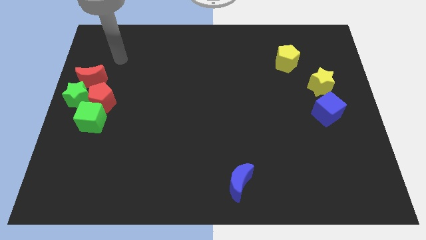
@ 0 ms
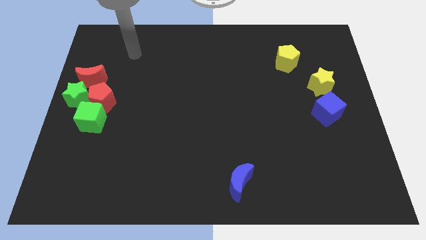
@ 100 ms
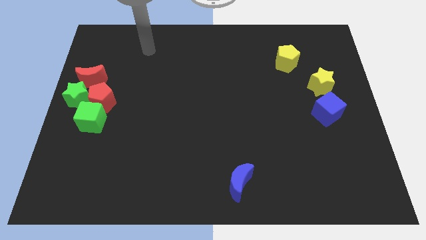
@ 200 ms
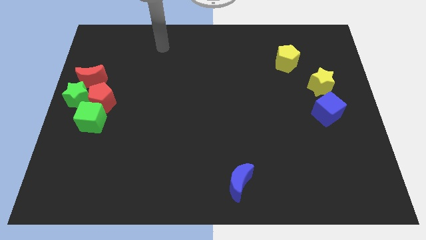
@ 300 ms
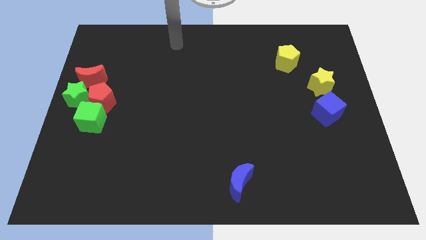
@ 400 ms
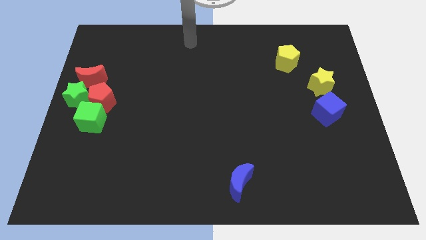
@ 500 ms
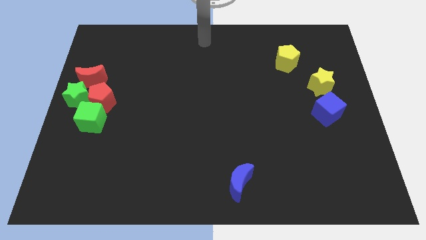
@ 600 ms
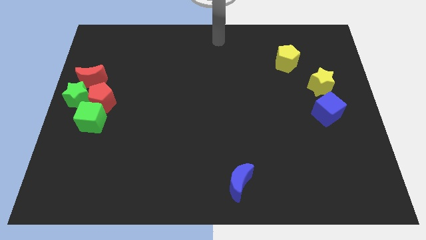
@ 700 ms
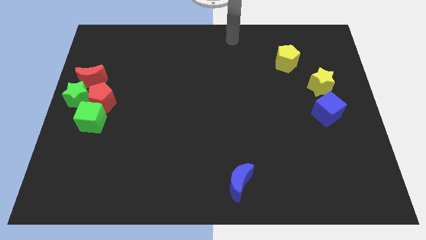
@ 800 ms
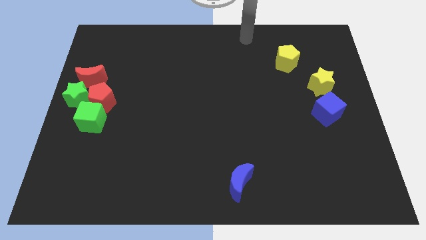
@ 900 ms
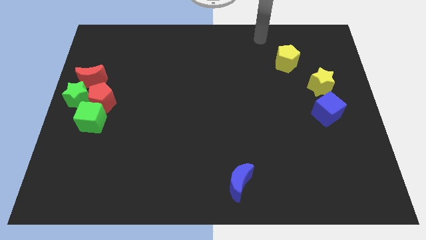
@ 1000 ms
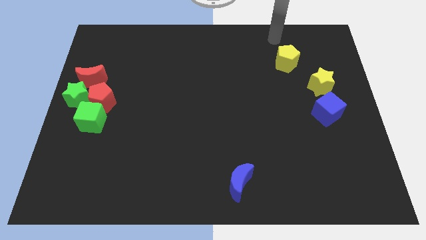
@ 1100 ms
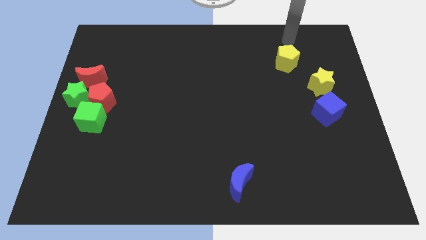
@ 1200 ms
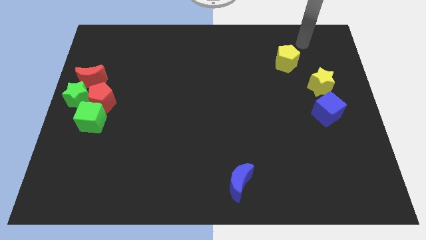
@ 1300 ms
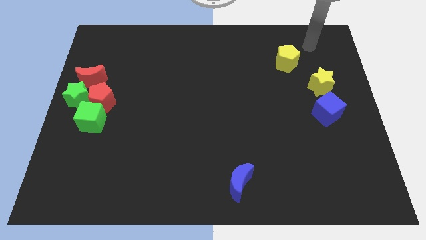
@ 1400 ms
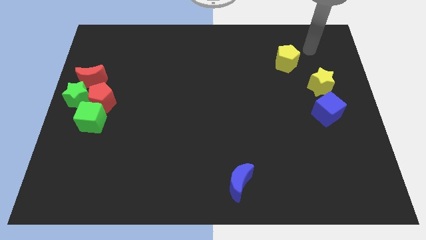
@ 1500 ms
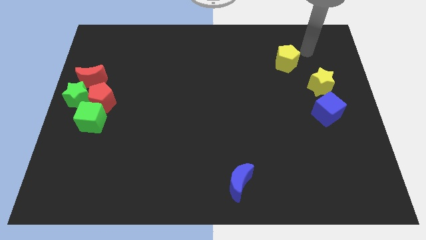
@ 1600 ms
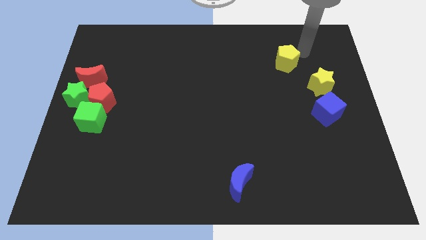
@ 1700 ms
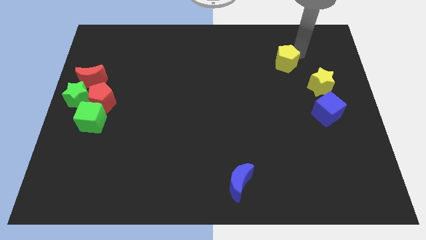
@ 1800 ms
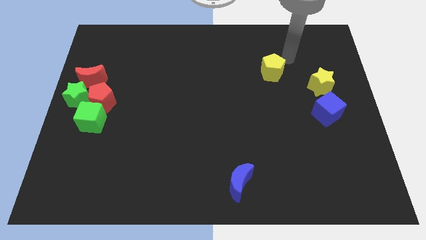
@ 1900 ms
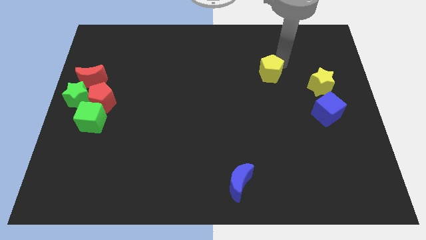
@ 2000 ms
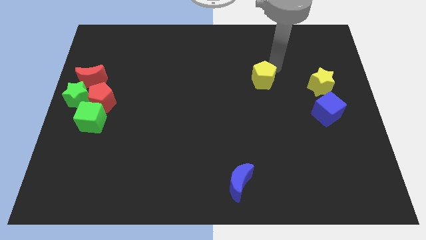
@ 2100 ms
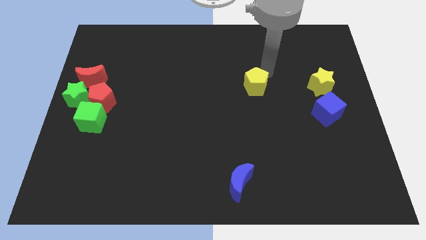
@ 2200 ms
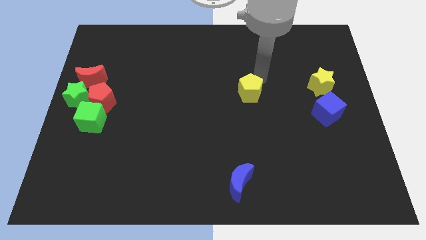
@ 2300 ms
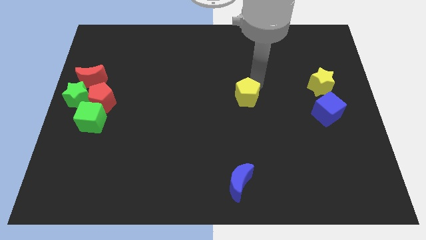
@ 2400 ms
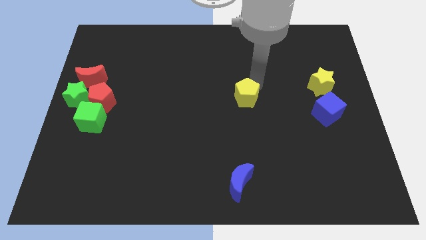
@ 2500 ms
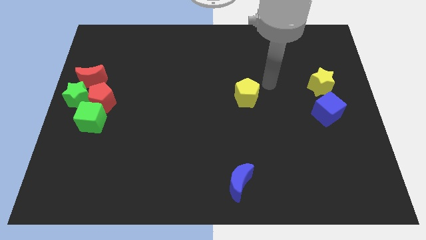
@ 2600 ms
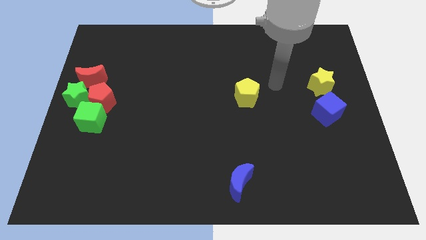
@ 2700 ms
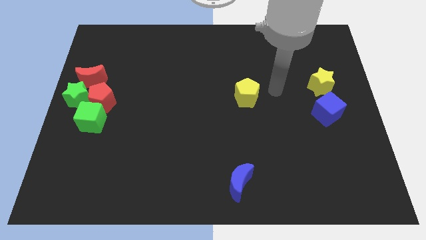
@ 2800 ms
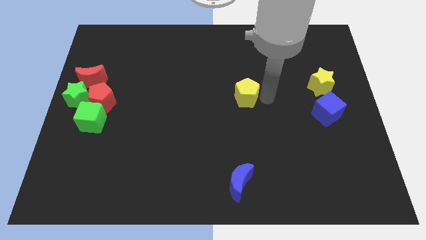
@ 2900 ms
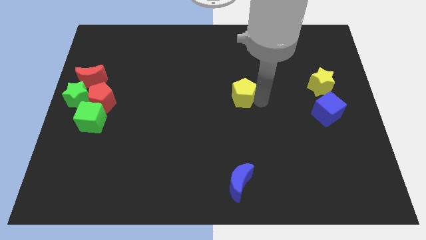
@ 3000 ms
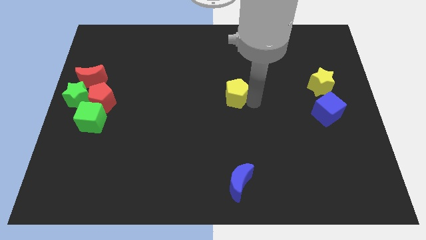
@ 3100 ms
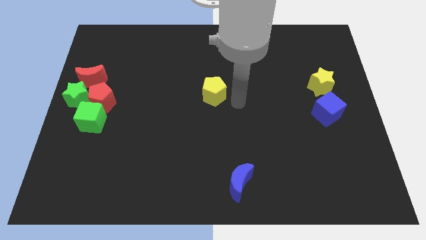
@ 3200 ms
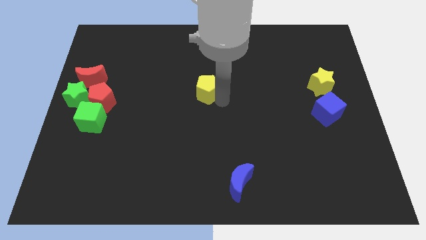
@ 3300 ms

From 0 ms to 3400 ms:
move the yellow pentagon toward the center side of the board

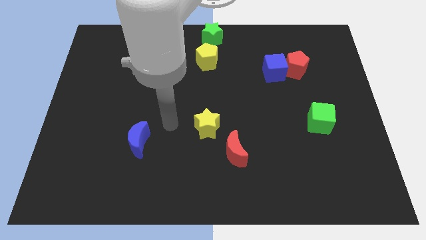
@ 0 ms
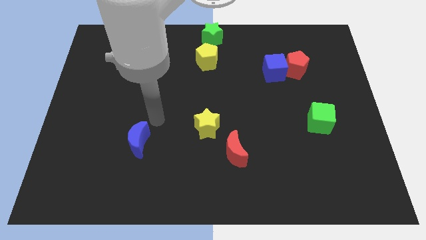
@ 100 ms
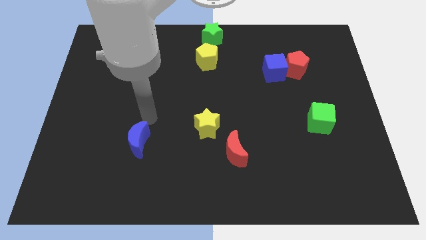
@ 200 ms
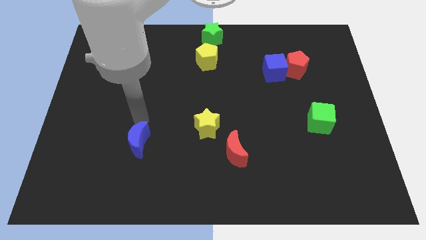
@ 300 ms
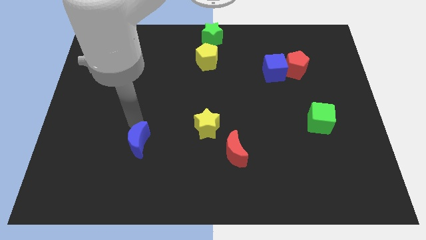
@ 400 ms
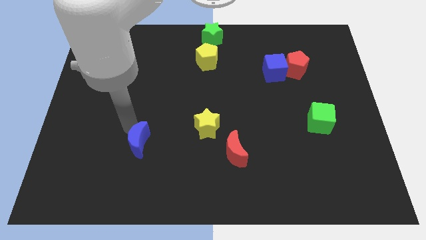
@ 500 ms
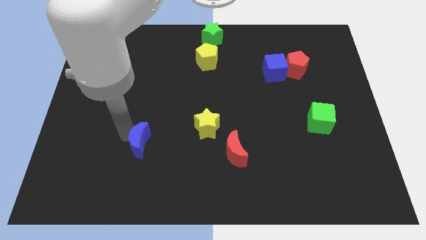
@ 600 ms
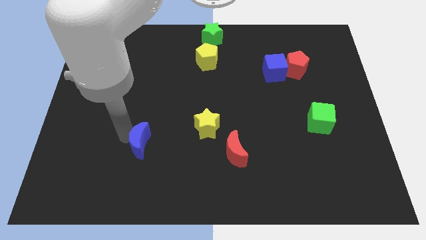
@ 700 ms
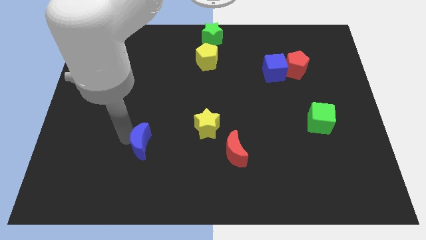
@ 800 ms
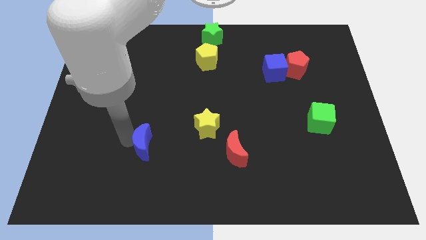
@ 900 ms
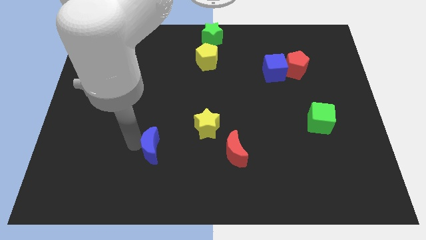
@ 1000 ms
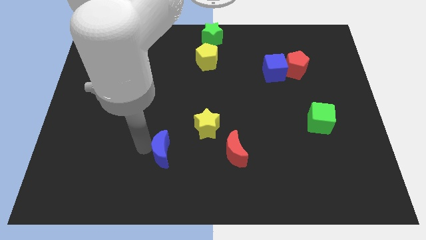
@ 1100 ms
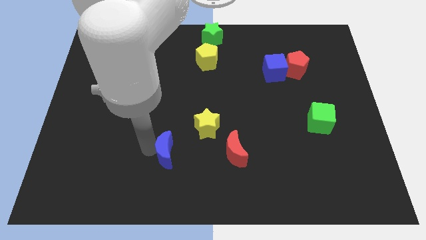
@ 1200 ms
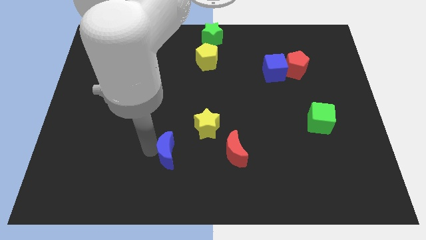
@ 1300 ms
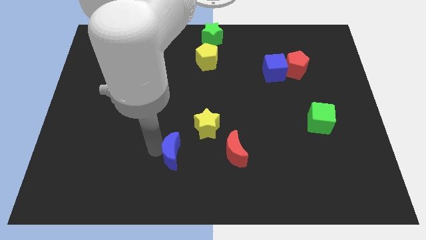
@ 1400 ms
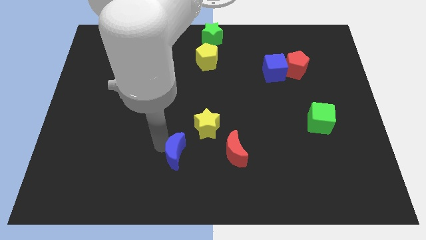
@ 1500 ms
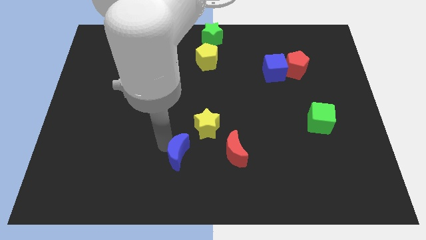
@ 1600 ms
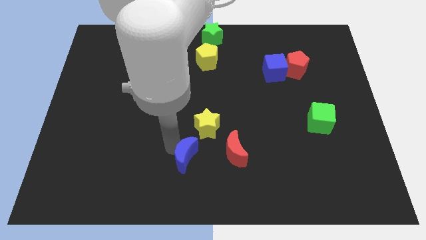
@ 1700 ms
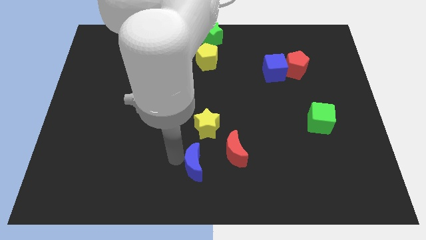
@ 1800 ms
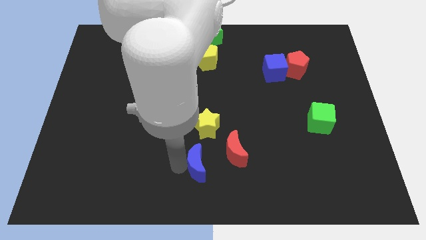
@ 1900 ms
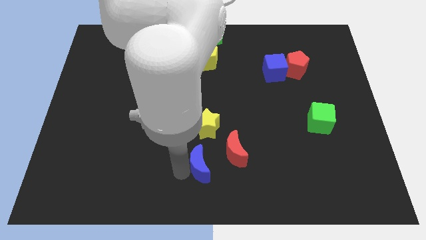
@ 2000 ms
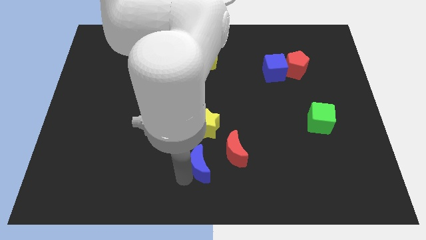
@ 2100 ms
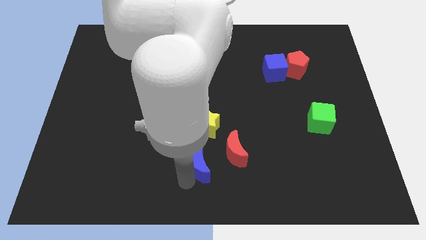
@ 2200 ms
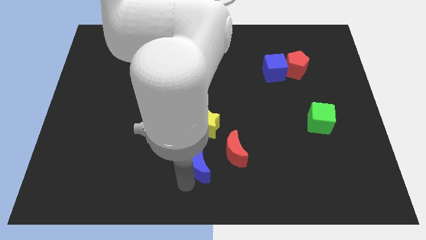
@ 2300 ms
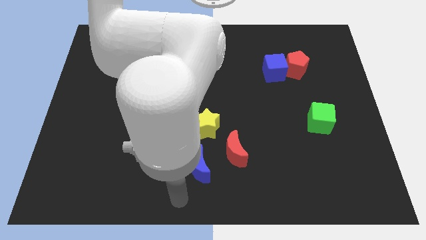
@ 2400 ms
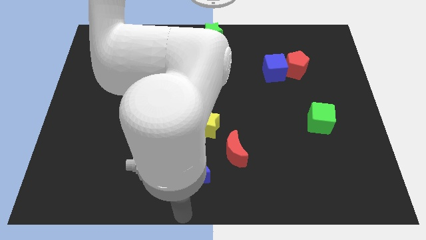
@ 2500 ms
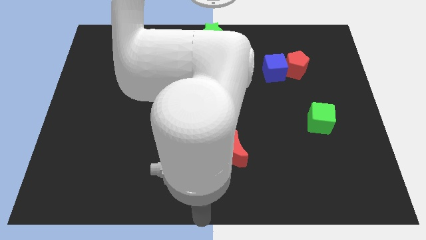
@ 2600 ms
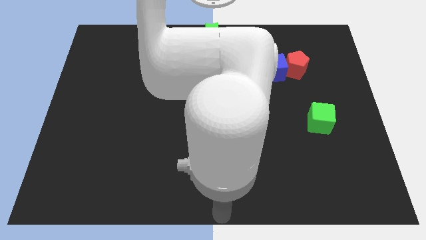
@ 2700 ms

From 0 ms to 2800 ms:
move the blue crescent to the bottom of the yellow star

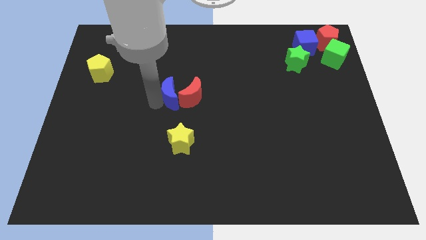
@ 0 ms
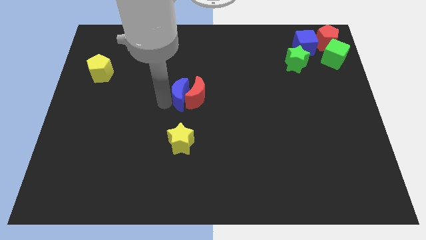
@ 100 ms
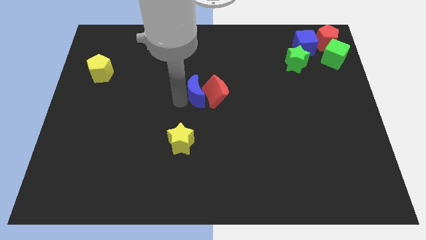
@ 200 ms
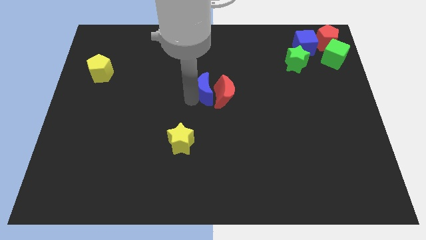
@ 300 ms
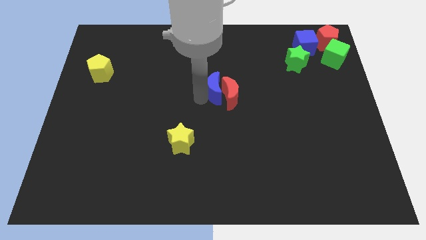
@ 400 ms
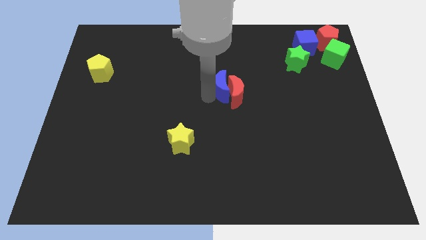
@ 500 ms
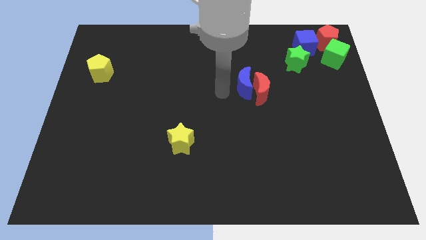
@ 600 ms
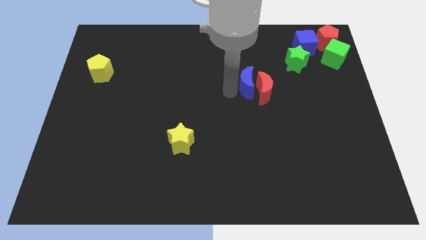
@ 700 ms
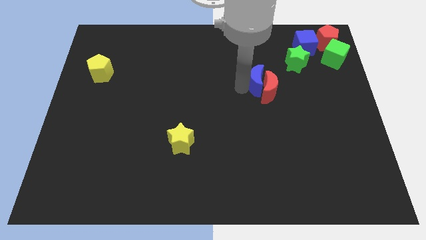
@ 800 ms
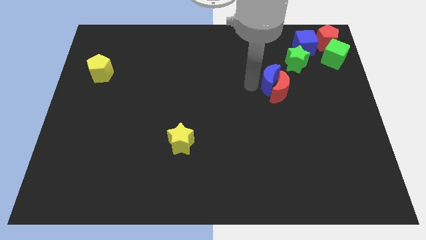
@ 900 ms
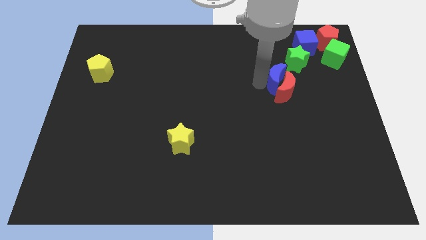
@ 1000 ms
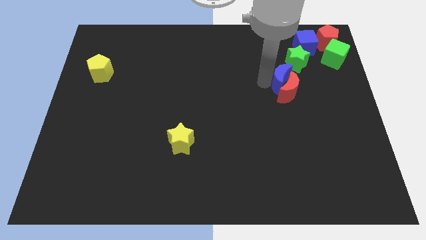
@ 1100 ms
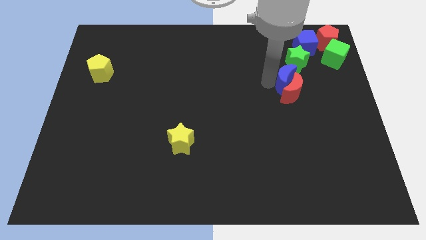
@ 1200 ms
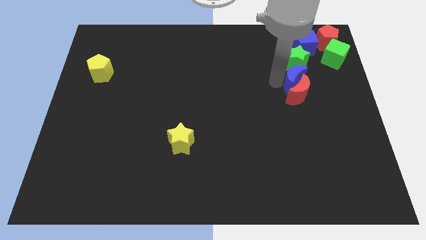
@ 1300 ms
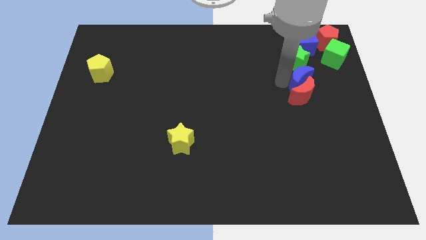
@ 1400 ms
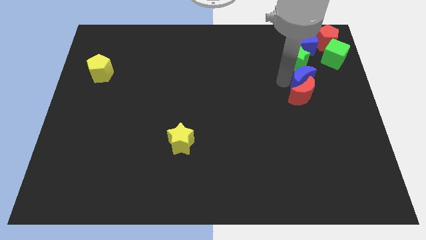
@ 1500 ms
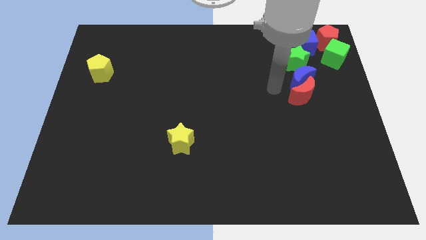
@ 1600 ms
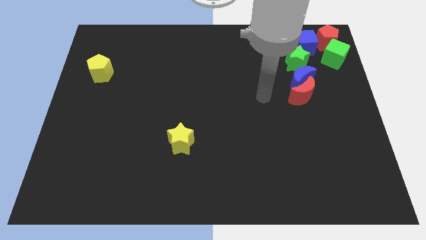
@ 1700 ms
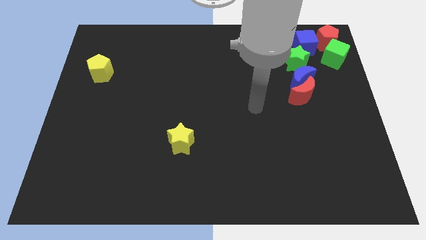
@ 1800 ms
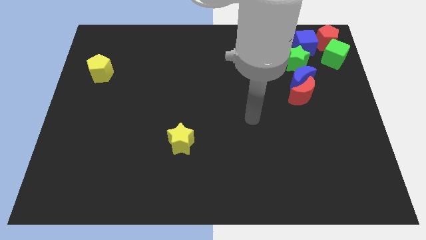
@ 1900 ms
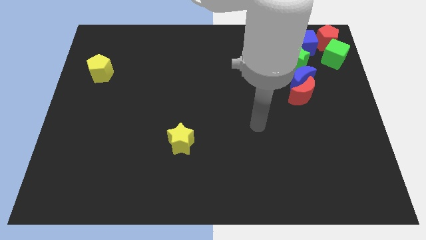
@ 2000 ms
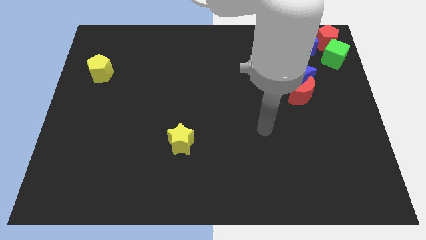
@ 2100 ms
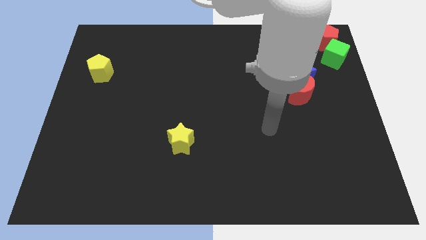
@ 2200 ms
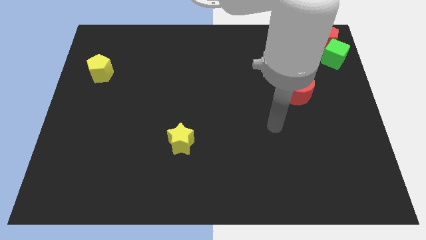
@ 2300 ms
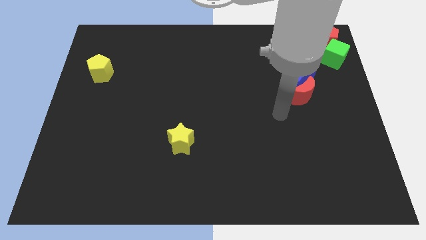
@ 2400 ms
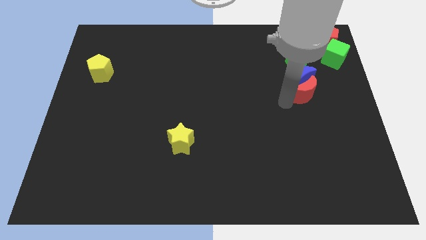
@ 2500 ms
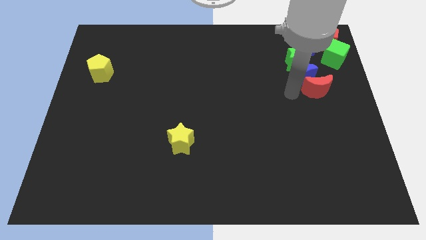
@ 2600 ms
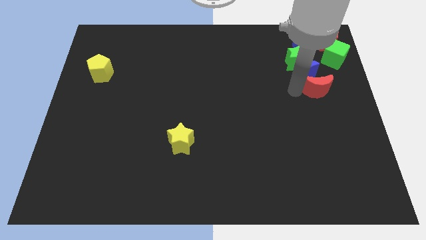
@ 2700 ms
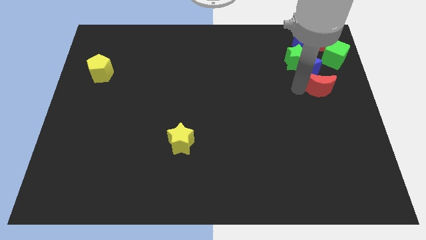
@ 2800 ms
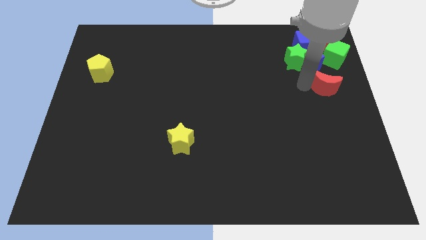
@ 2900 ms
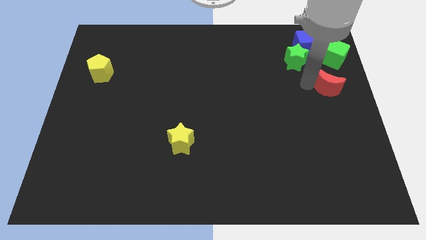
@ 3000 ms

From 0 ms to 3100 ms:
move the blue crescent and red crescent towards the top right
